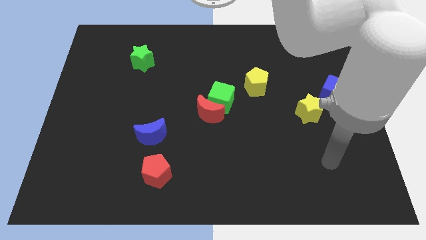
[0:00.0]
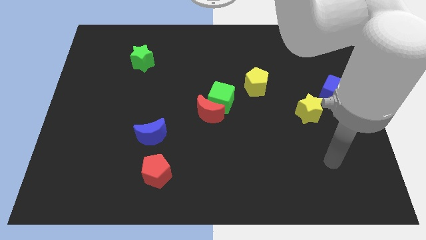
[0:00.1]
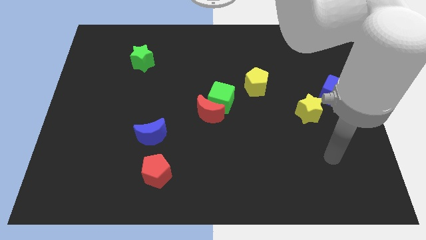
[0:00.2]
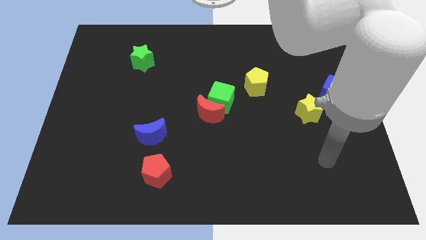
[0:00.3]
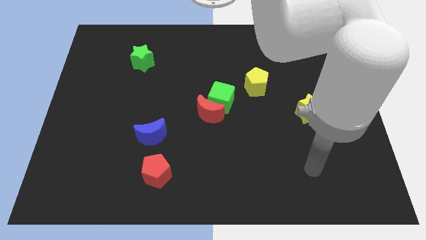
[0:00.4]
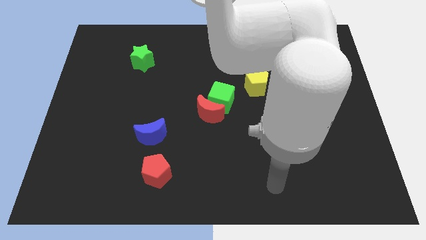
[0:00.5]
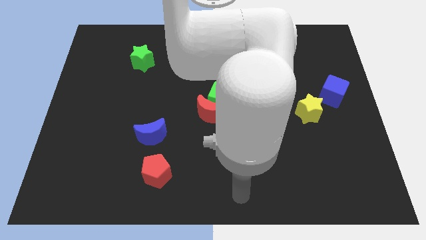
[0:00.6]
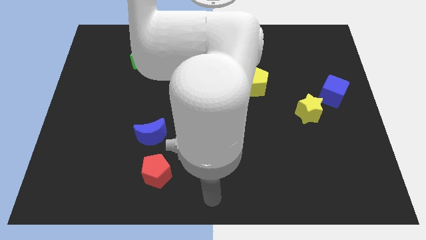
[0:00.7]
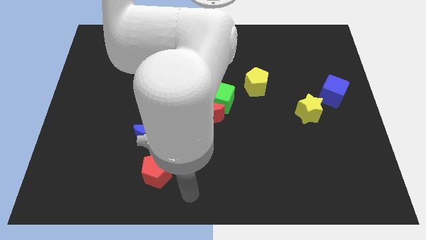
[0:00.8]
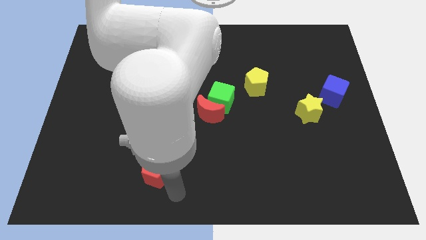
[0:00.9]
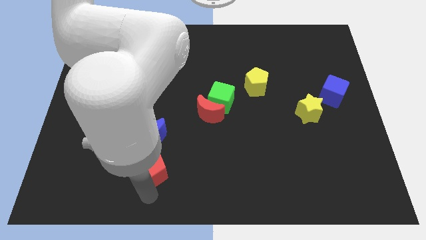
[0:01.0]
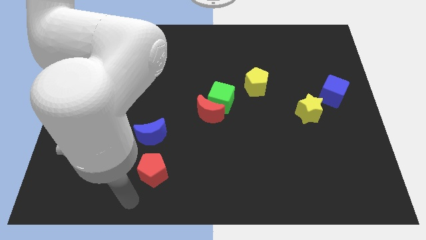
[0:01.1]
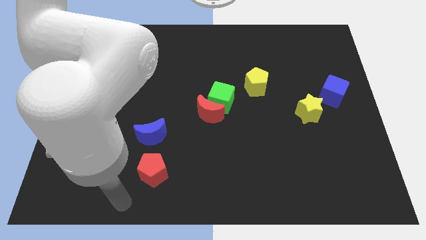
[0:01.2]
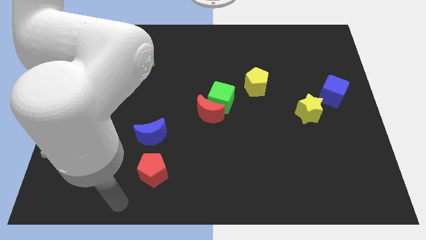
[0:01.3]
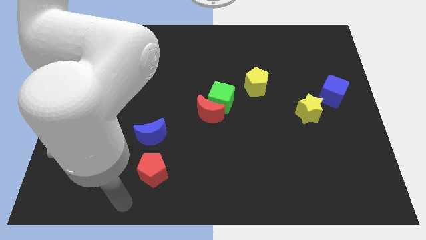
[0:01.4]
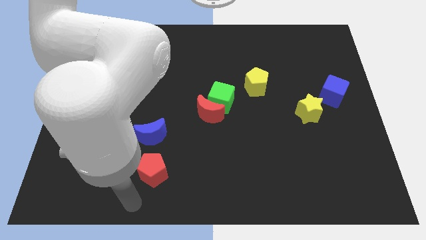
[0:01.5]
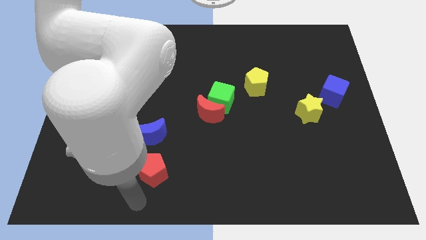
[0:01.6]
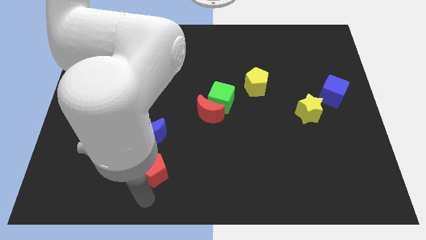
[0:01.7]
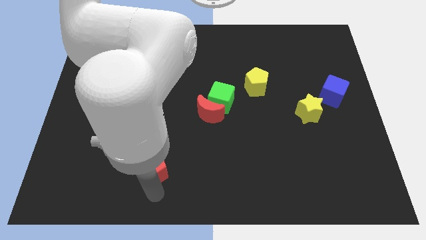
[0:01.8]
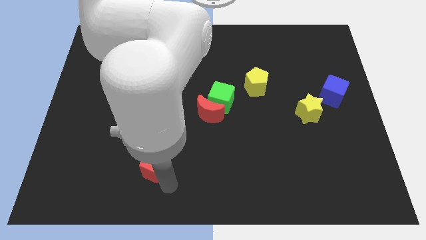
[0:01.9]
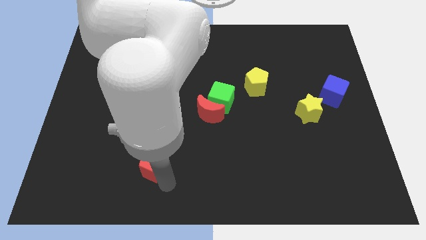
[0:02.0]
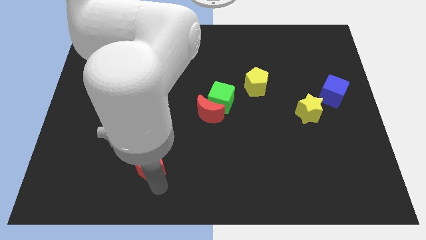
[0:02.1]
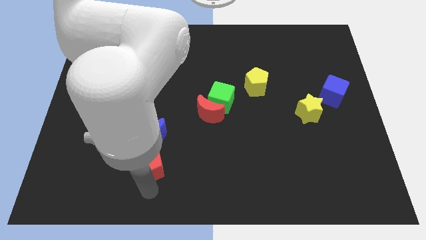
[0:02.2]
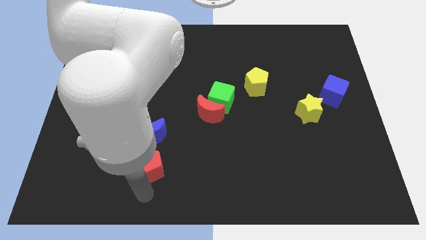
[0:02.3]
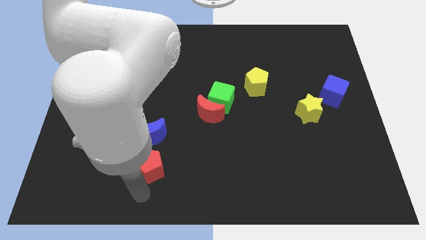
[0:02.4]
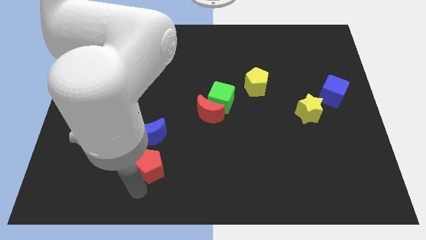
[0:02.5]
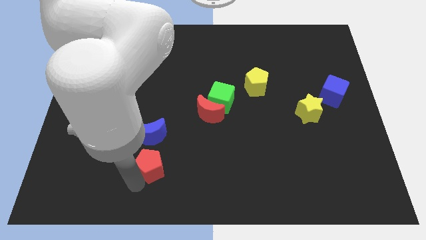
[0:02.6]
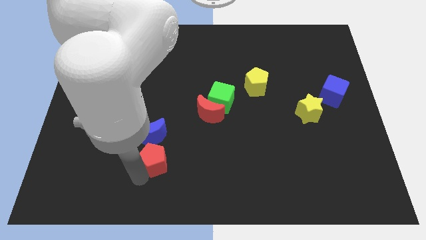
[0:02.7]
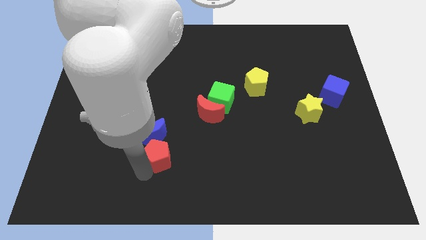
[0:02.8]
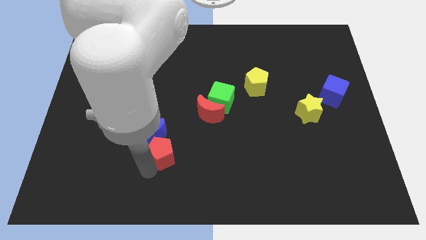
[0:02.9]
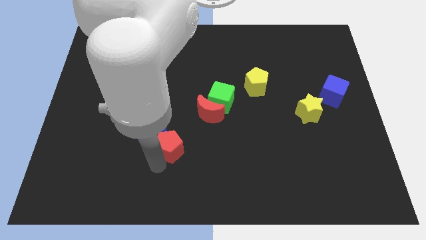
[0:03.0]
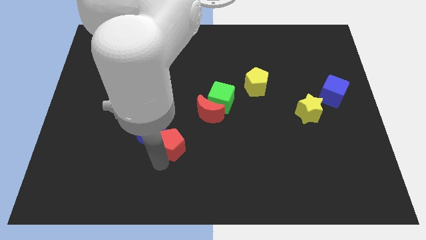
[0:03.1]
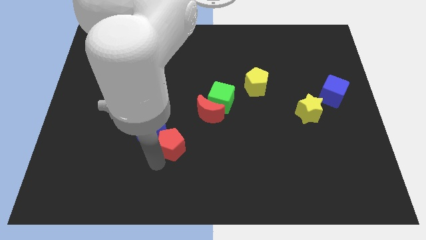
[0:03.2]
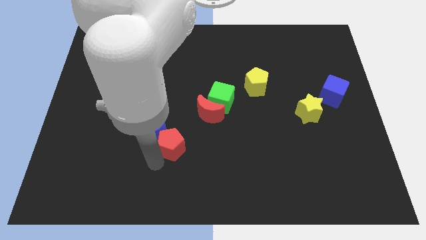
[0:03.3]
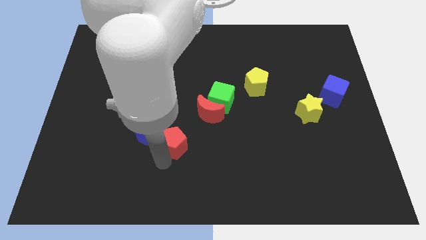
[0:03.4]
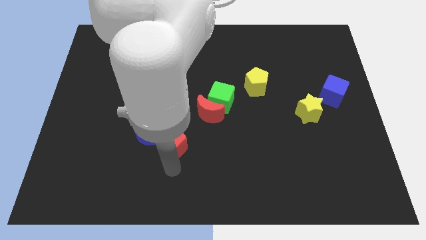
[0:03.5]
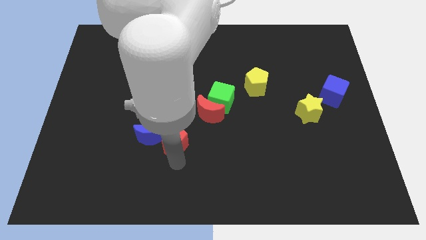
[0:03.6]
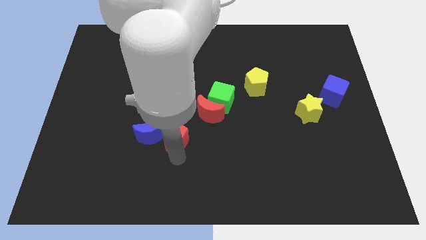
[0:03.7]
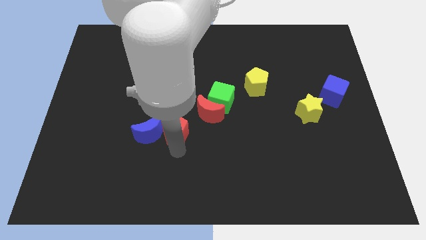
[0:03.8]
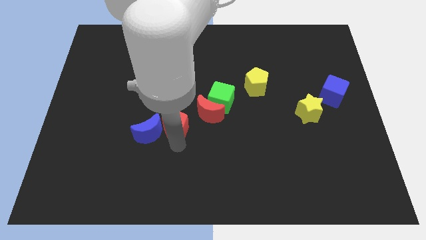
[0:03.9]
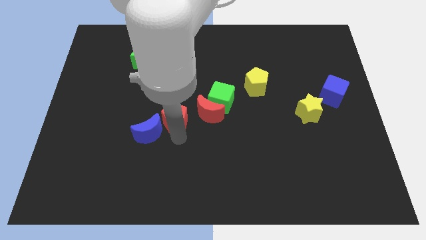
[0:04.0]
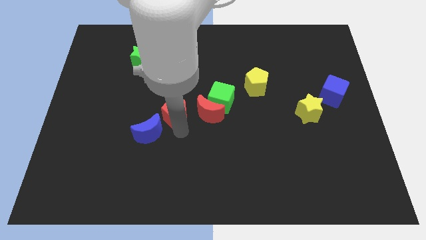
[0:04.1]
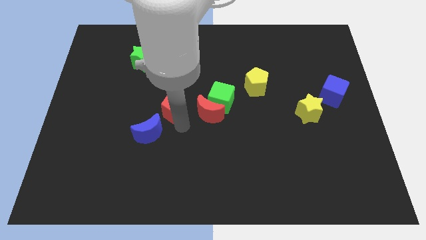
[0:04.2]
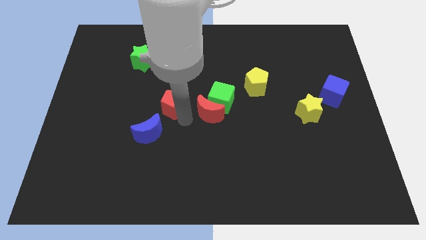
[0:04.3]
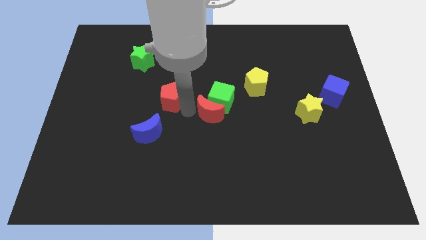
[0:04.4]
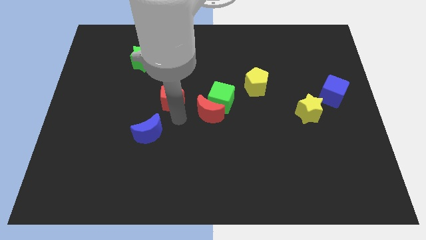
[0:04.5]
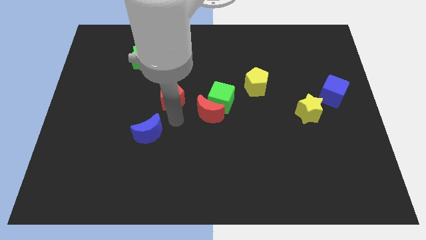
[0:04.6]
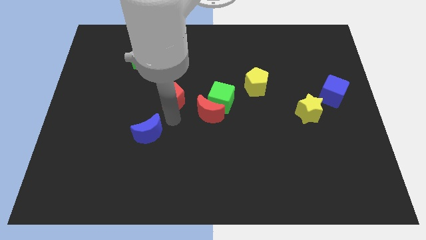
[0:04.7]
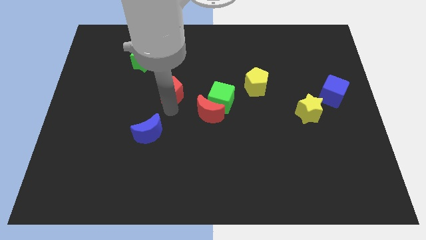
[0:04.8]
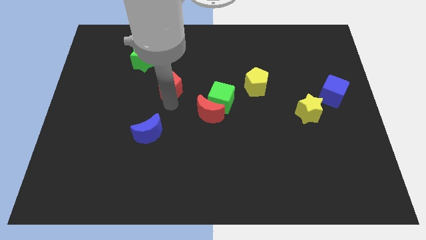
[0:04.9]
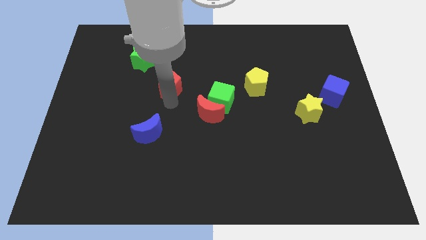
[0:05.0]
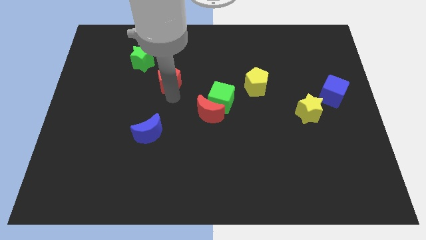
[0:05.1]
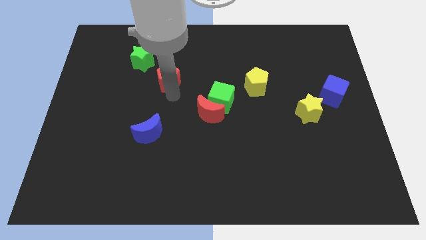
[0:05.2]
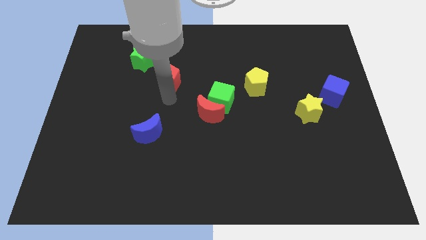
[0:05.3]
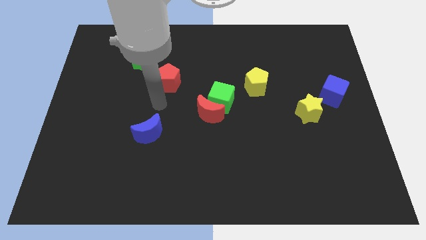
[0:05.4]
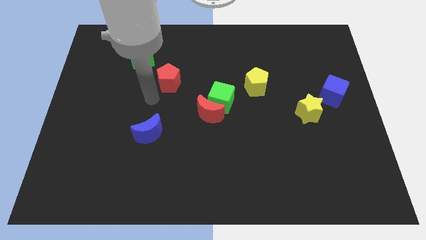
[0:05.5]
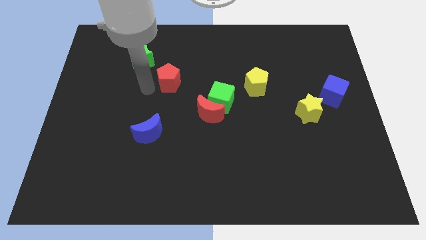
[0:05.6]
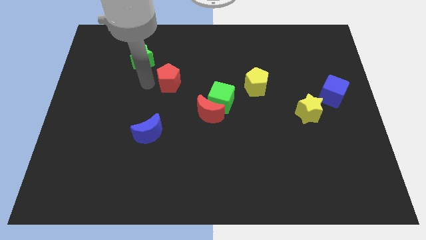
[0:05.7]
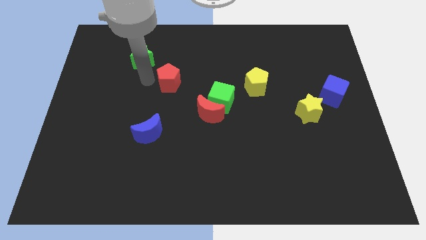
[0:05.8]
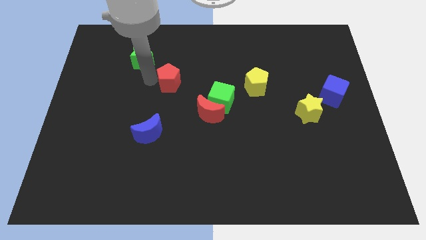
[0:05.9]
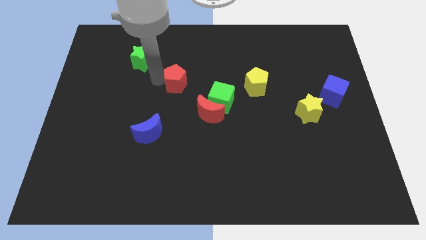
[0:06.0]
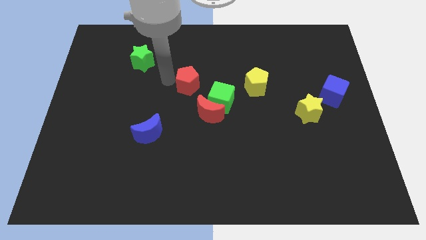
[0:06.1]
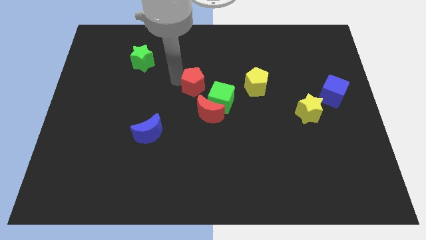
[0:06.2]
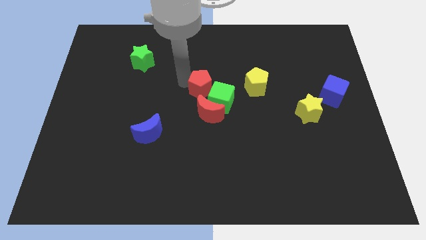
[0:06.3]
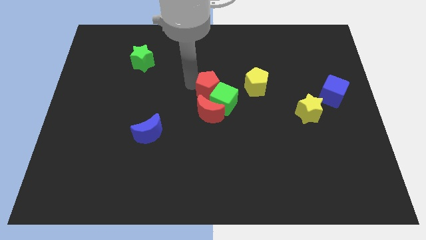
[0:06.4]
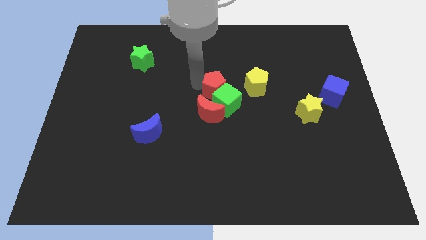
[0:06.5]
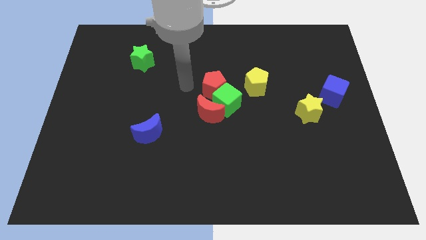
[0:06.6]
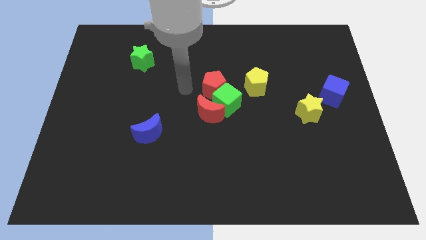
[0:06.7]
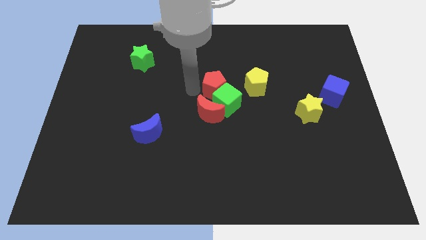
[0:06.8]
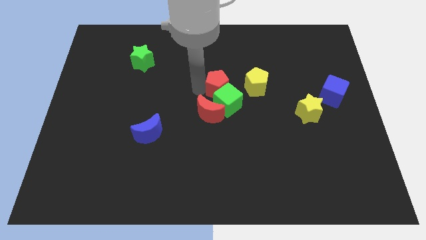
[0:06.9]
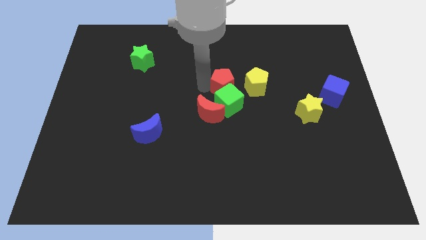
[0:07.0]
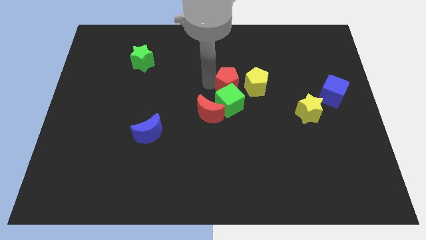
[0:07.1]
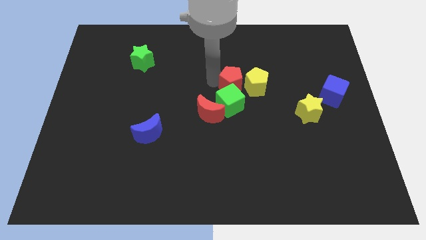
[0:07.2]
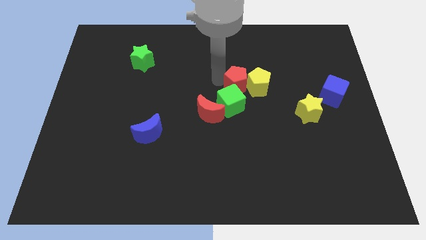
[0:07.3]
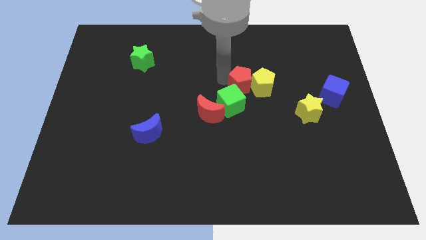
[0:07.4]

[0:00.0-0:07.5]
slide the red pentagon close to the yellow pentagon

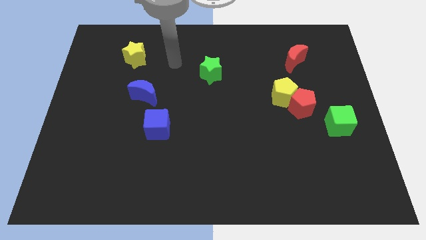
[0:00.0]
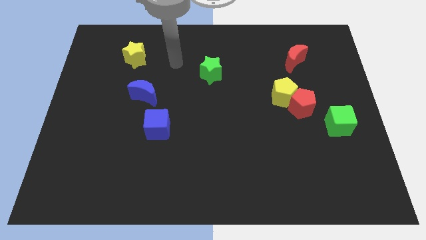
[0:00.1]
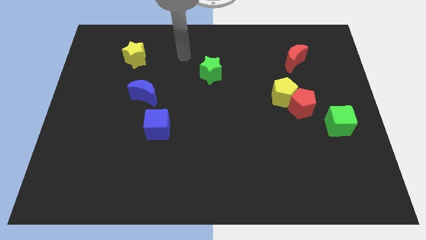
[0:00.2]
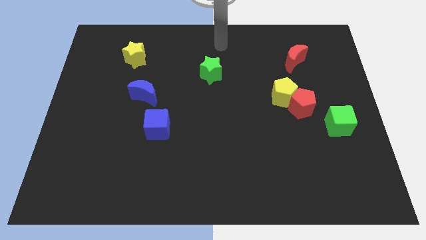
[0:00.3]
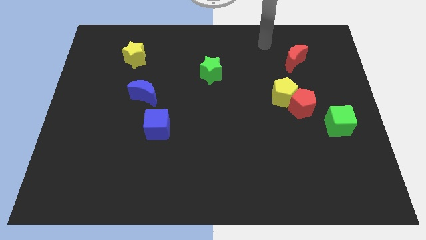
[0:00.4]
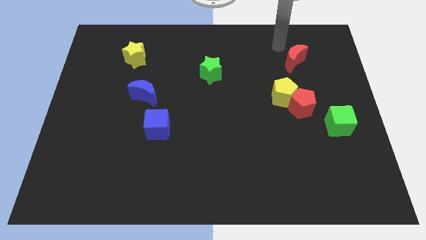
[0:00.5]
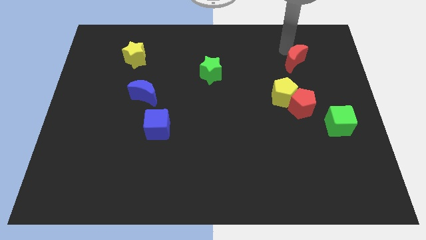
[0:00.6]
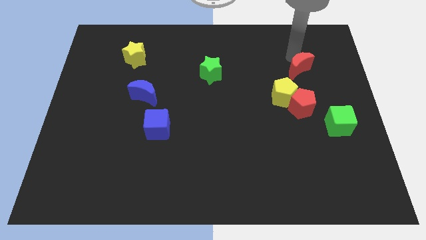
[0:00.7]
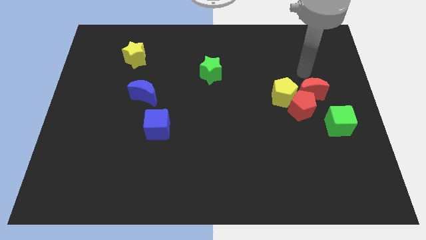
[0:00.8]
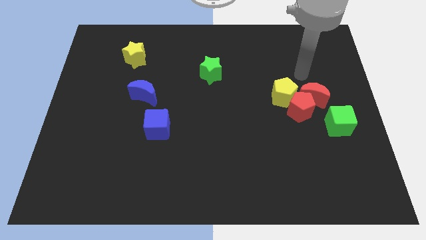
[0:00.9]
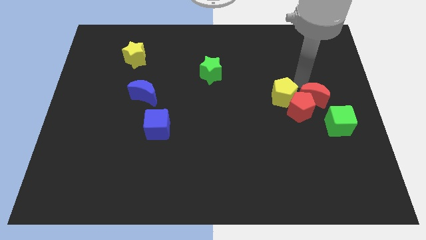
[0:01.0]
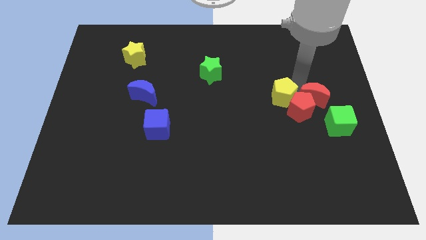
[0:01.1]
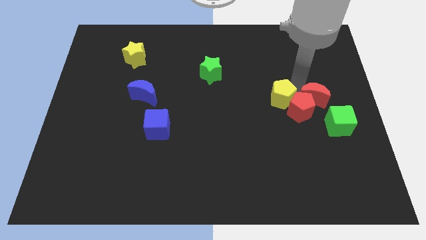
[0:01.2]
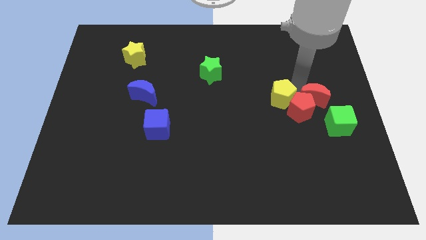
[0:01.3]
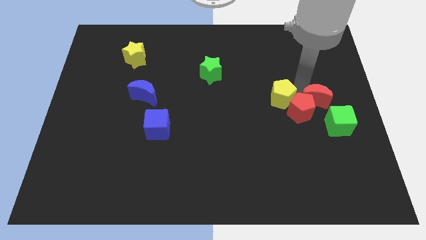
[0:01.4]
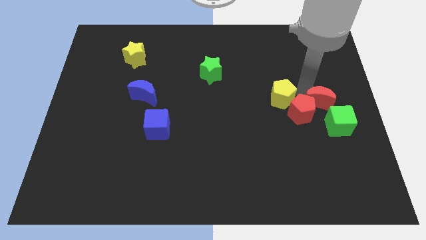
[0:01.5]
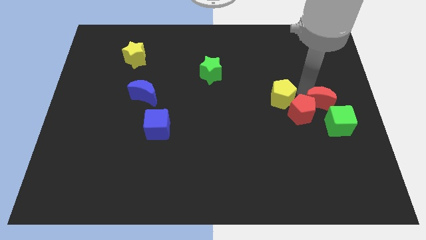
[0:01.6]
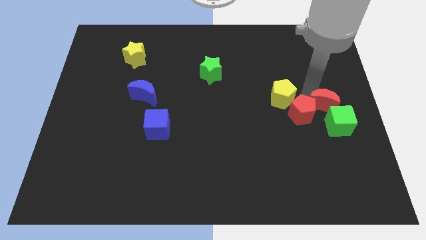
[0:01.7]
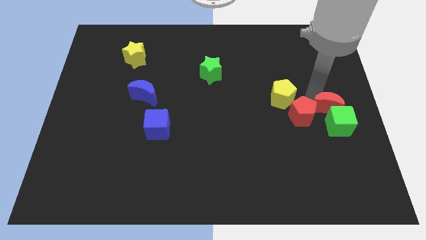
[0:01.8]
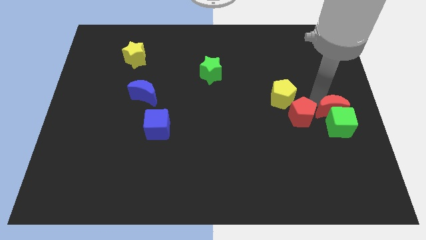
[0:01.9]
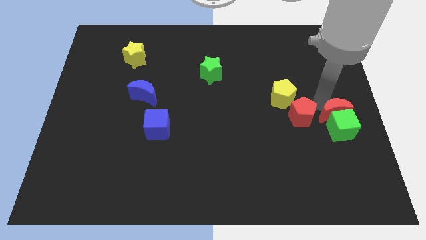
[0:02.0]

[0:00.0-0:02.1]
slide the red moon to the green cube
